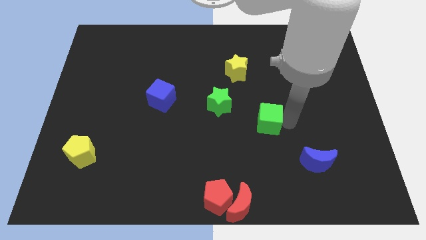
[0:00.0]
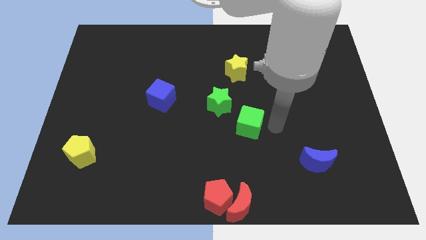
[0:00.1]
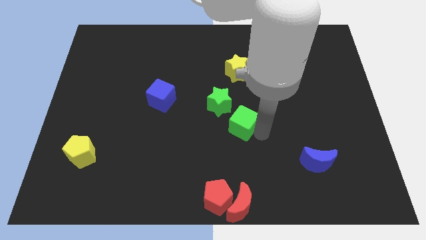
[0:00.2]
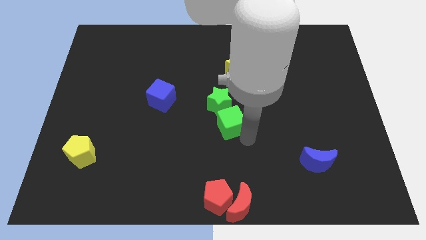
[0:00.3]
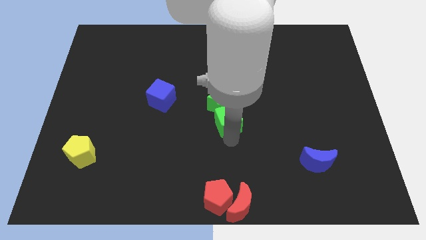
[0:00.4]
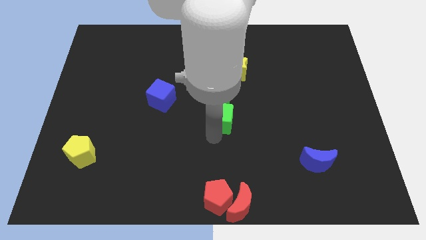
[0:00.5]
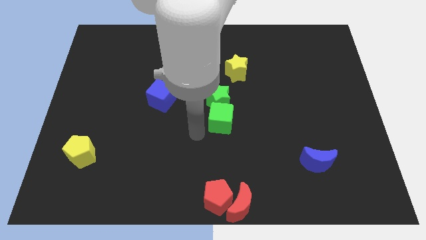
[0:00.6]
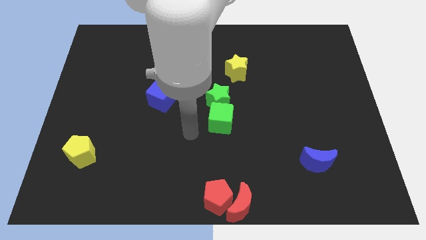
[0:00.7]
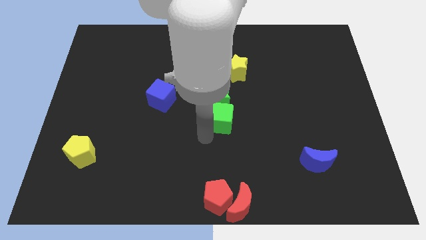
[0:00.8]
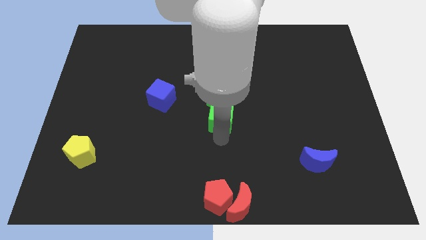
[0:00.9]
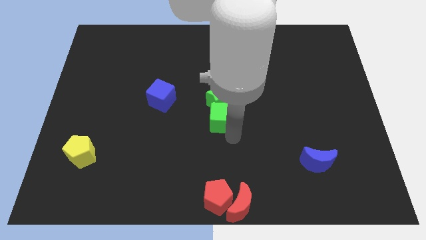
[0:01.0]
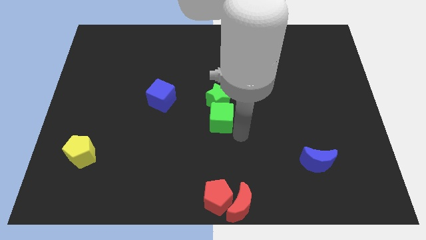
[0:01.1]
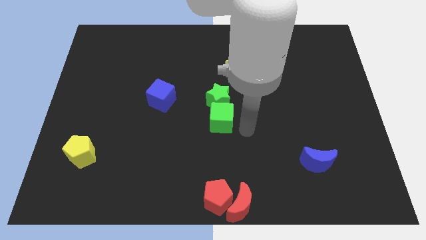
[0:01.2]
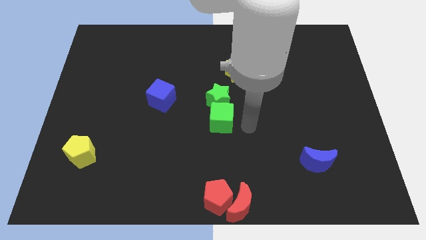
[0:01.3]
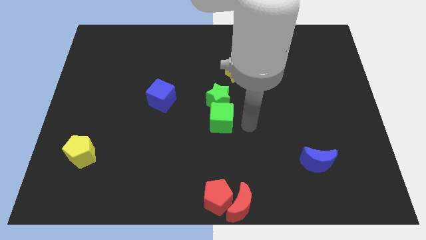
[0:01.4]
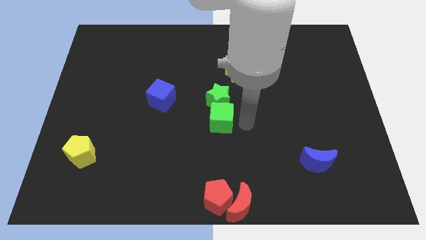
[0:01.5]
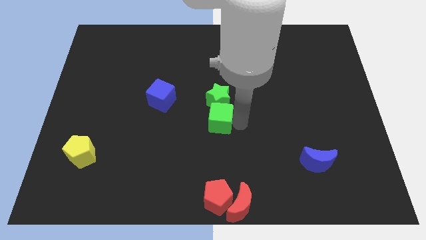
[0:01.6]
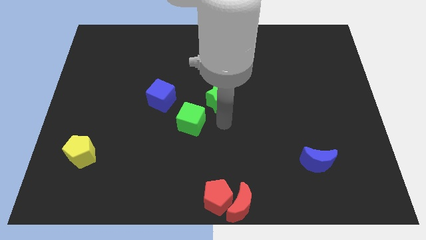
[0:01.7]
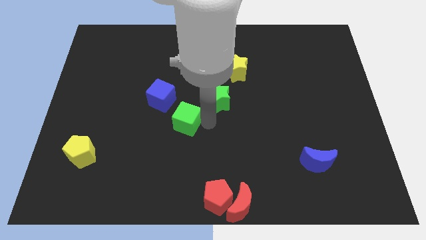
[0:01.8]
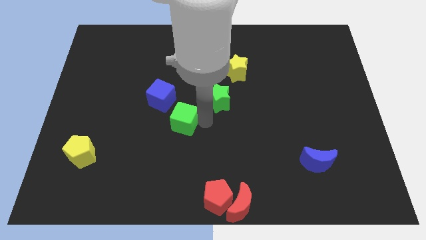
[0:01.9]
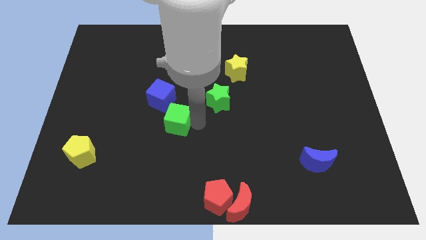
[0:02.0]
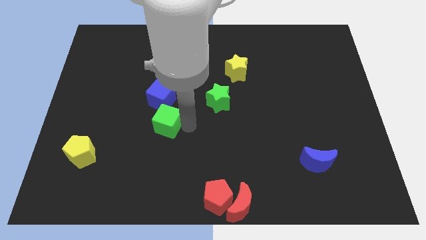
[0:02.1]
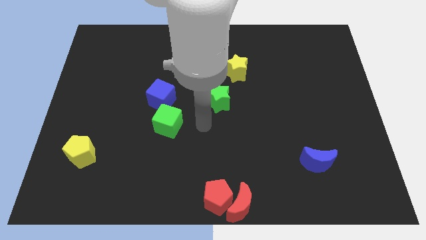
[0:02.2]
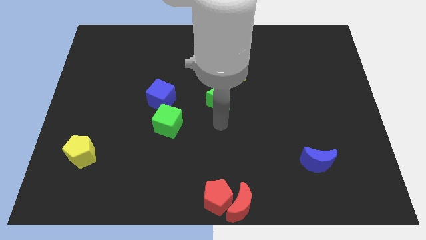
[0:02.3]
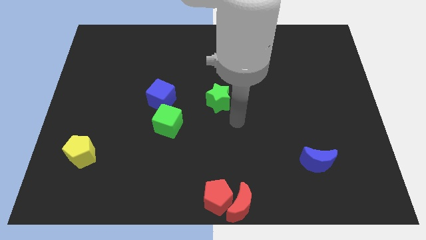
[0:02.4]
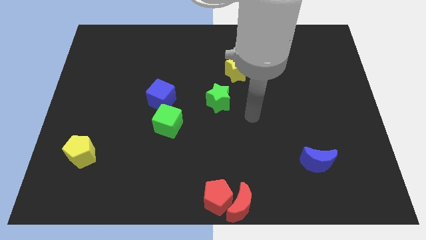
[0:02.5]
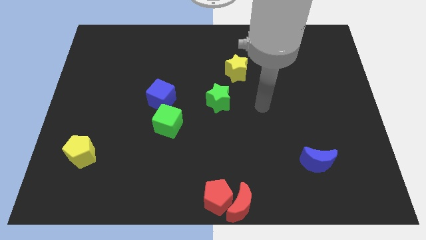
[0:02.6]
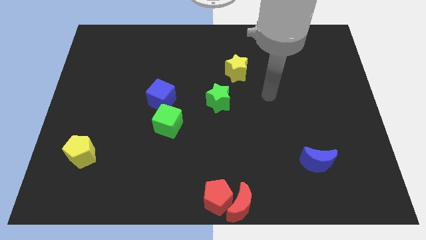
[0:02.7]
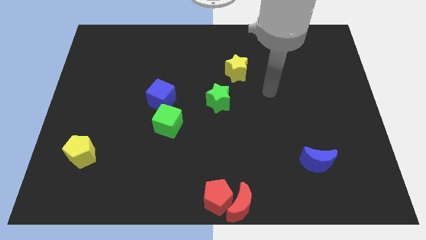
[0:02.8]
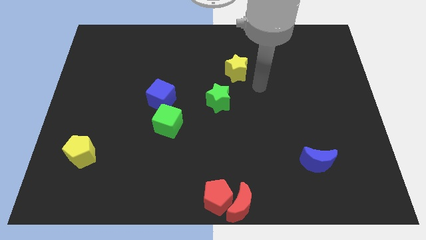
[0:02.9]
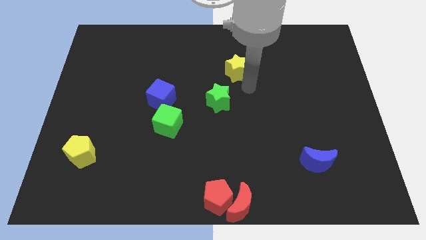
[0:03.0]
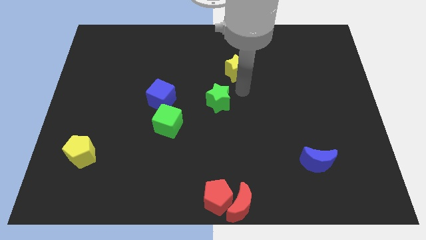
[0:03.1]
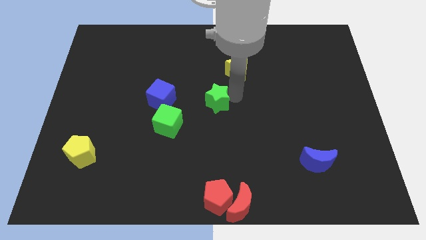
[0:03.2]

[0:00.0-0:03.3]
slide the green cube below the blue cube

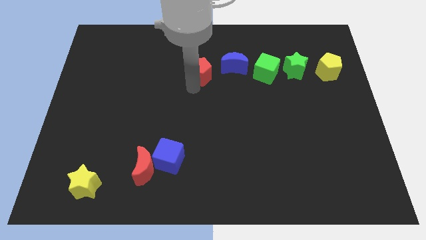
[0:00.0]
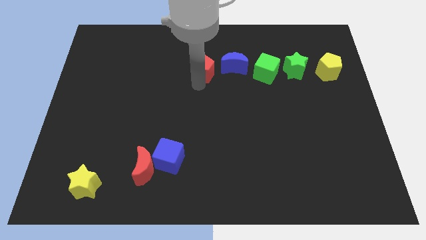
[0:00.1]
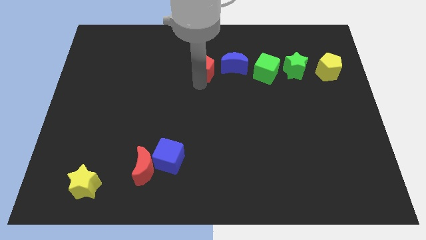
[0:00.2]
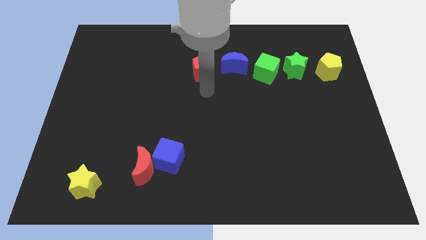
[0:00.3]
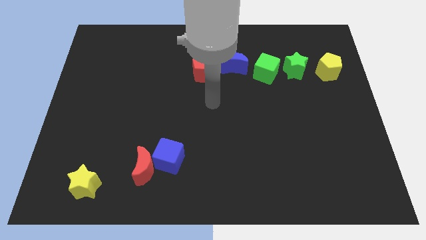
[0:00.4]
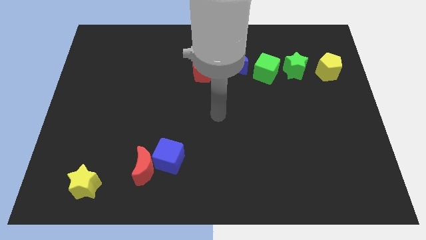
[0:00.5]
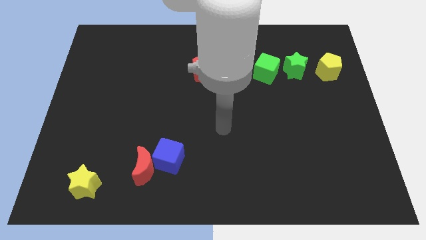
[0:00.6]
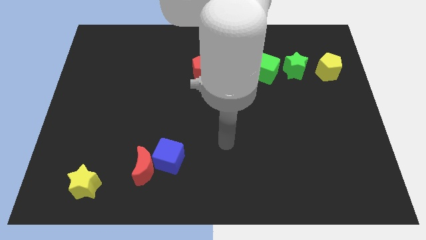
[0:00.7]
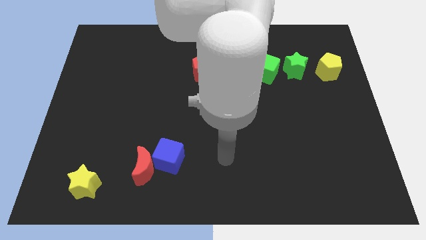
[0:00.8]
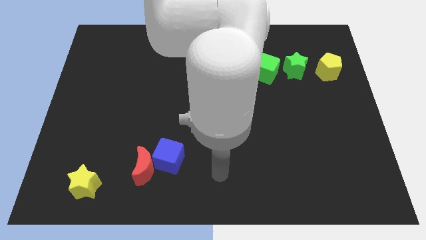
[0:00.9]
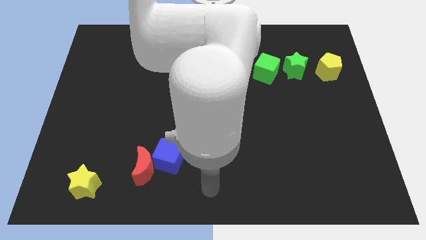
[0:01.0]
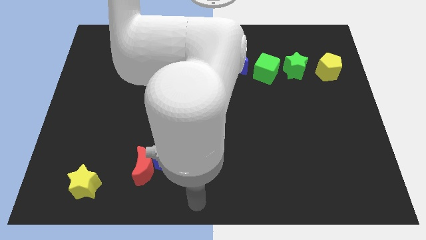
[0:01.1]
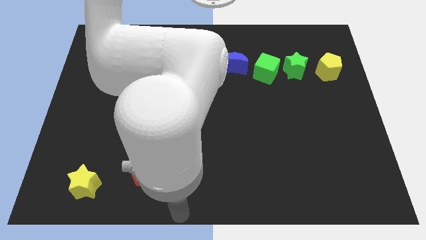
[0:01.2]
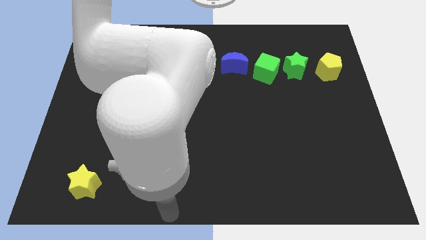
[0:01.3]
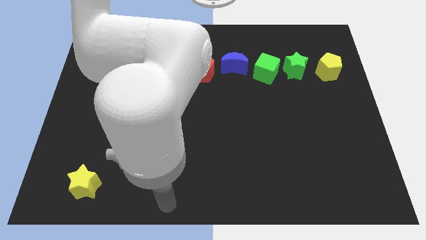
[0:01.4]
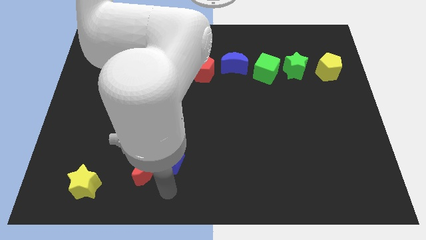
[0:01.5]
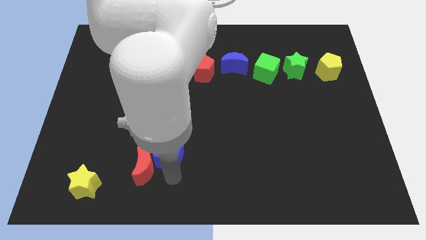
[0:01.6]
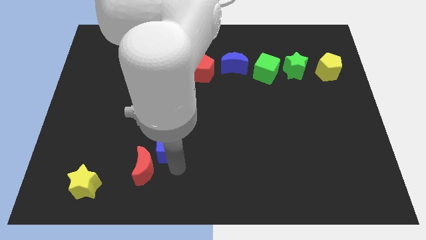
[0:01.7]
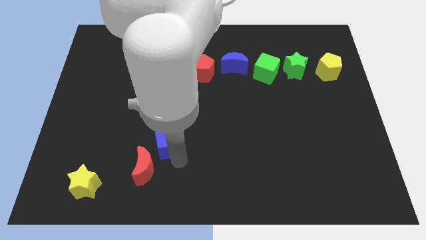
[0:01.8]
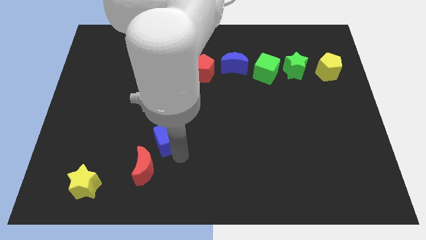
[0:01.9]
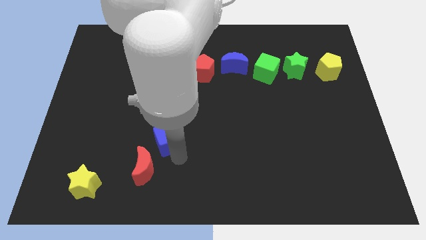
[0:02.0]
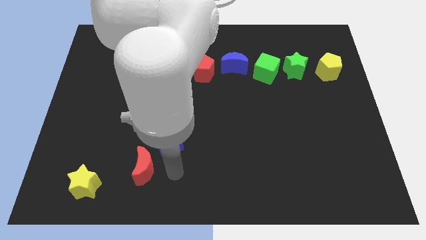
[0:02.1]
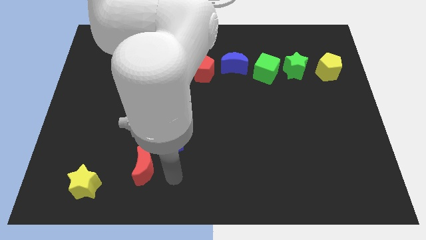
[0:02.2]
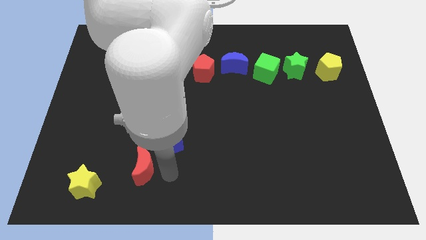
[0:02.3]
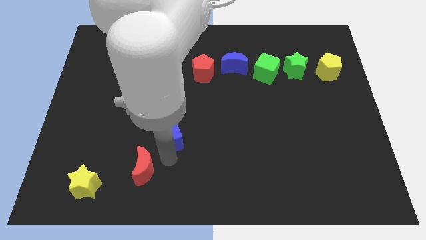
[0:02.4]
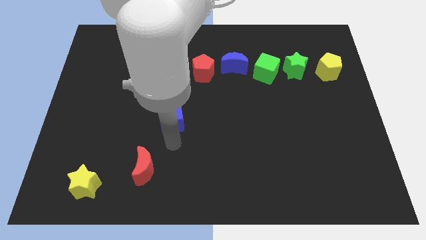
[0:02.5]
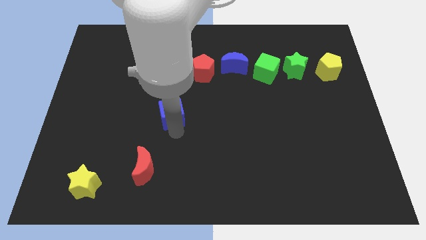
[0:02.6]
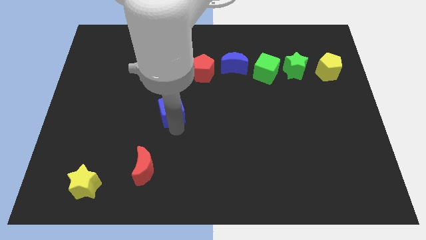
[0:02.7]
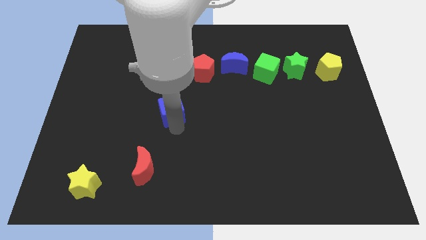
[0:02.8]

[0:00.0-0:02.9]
place the blue cube in between the red moon and the red pentagon

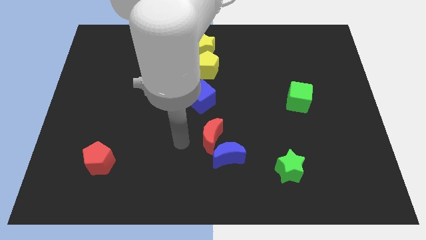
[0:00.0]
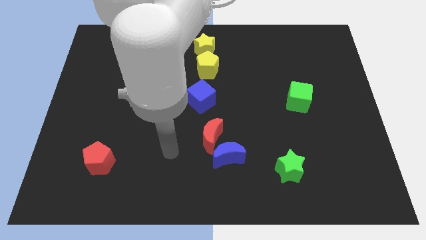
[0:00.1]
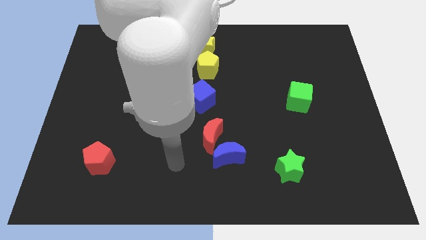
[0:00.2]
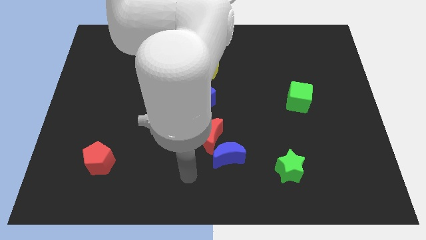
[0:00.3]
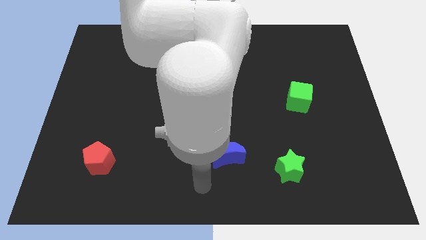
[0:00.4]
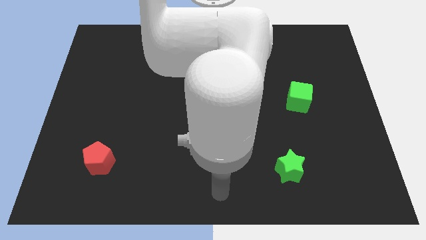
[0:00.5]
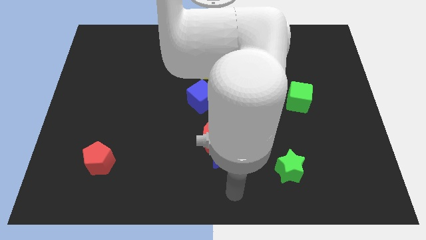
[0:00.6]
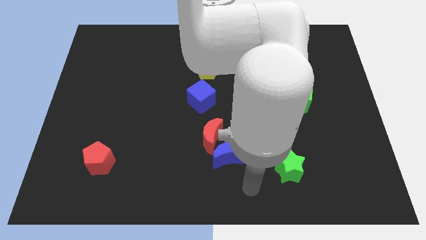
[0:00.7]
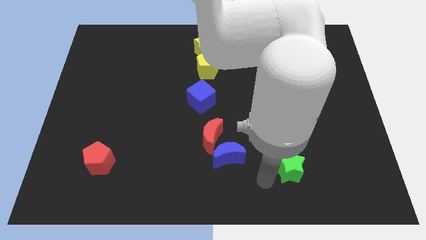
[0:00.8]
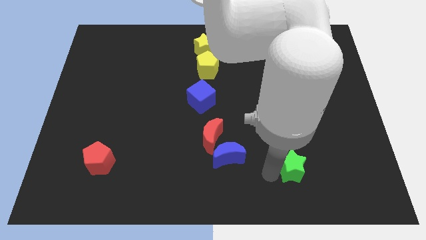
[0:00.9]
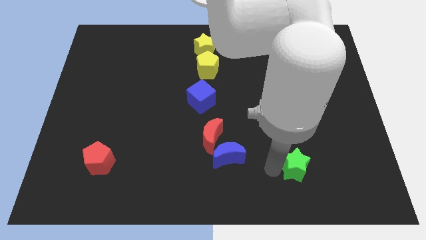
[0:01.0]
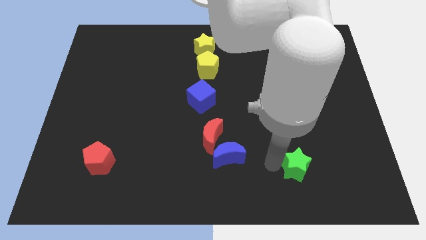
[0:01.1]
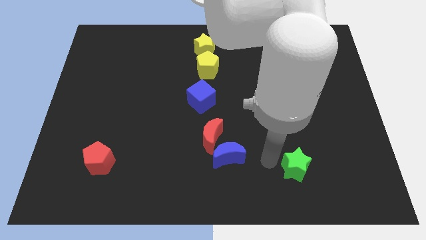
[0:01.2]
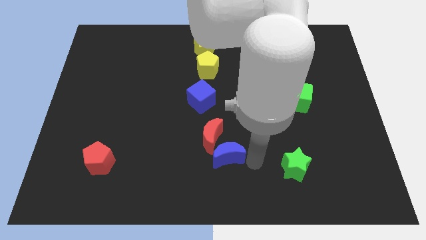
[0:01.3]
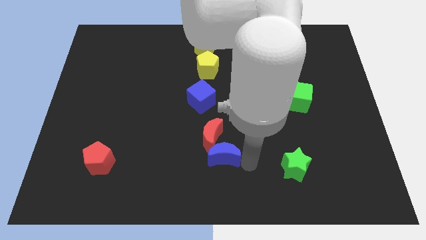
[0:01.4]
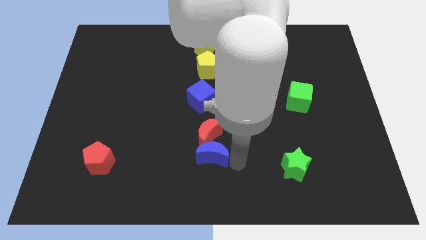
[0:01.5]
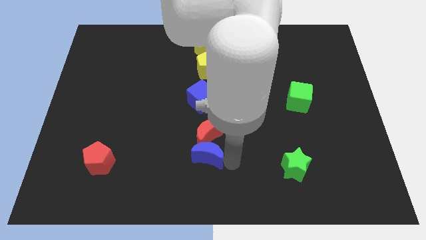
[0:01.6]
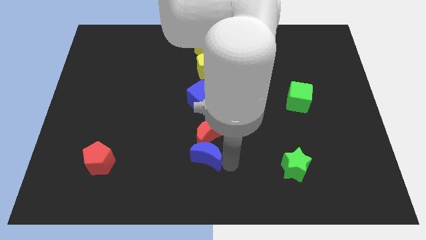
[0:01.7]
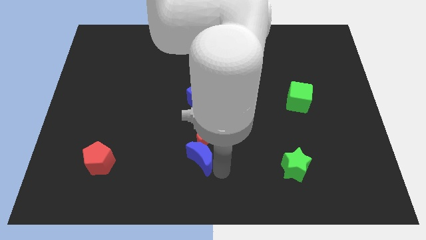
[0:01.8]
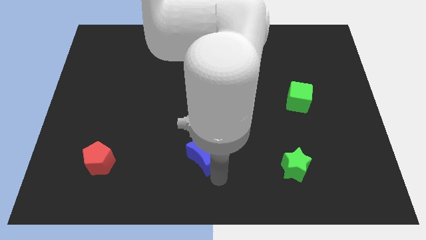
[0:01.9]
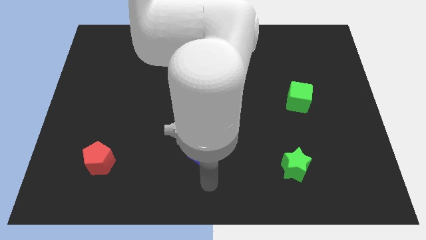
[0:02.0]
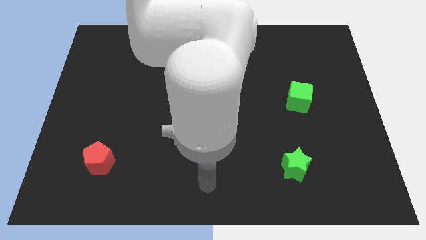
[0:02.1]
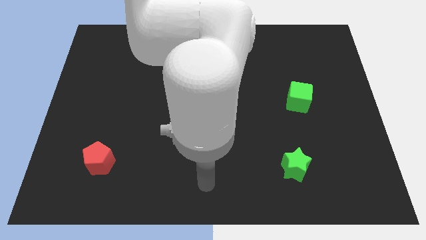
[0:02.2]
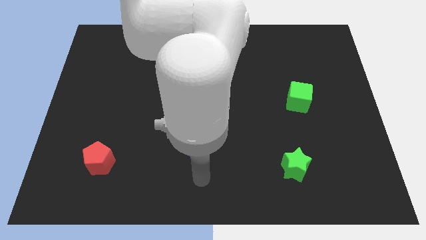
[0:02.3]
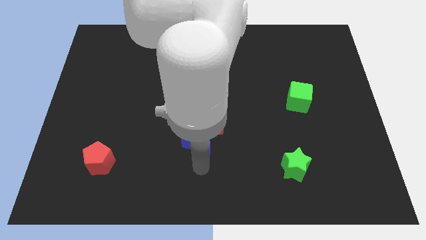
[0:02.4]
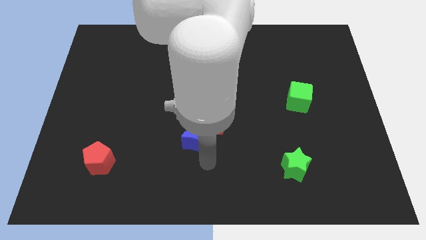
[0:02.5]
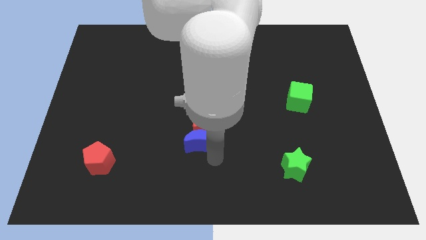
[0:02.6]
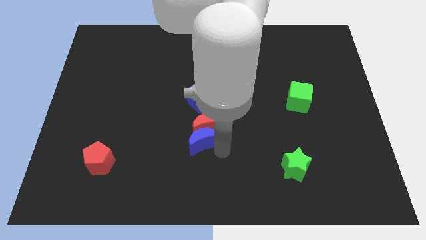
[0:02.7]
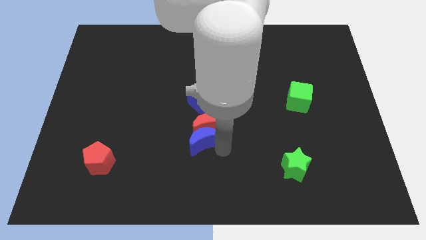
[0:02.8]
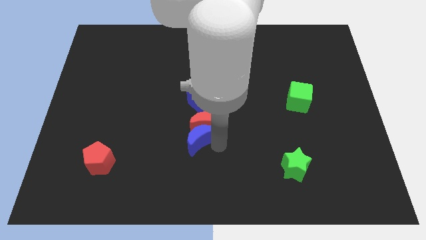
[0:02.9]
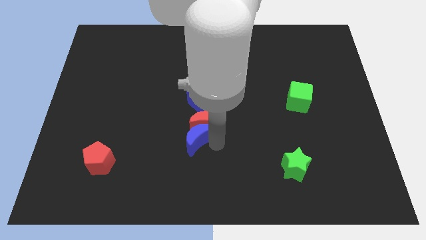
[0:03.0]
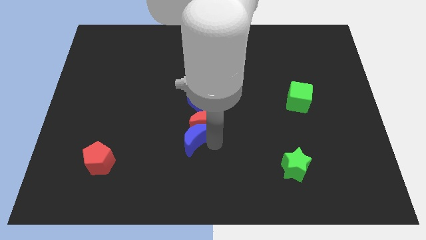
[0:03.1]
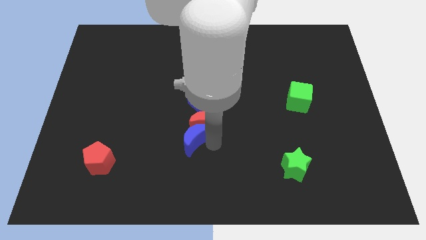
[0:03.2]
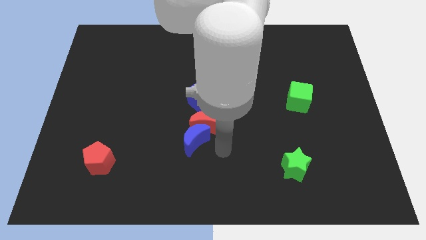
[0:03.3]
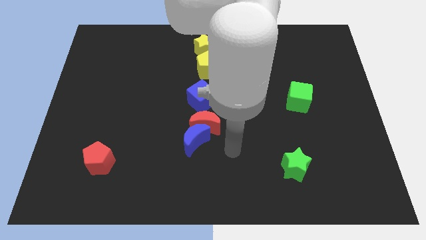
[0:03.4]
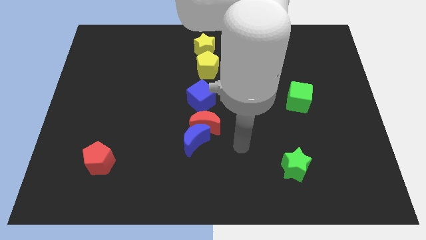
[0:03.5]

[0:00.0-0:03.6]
slide both the crescents to the bottom side of the blue cube
